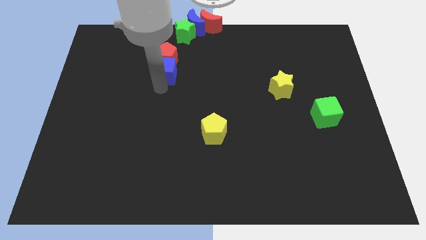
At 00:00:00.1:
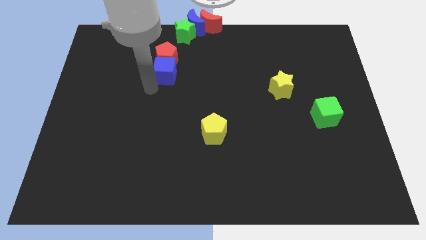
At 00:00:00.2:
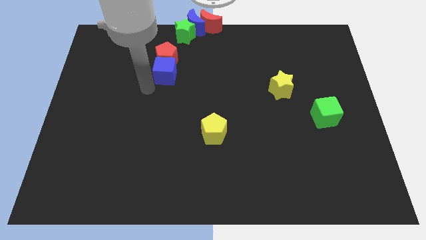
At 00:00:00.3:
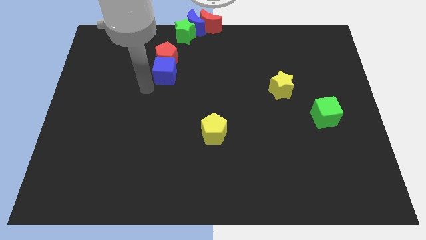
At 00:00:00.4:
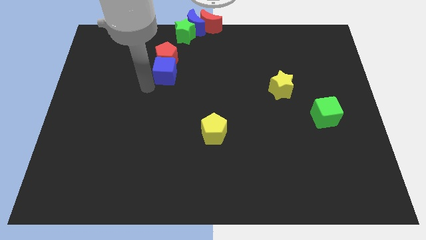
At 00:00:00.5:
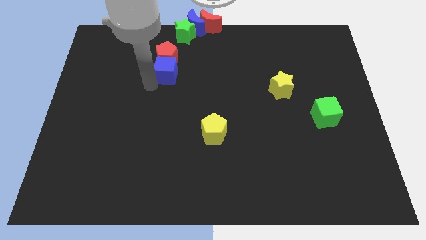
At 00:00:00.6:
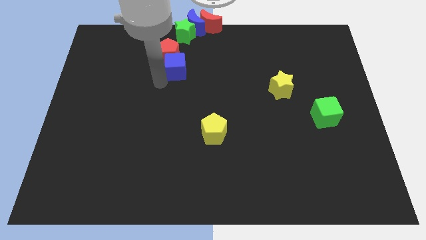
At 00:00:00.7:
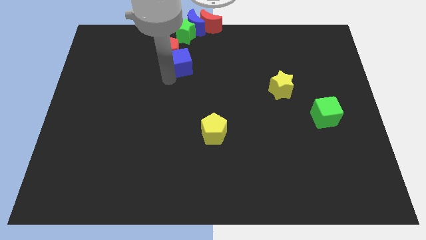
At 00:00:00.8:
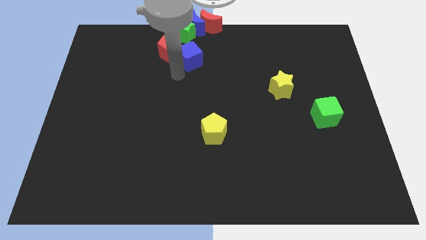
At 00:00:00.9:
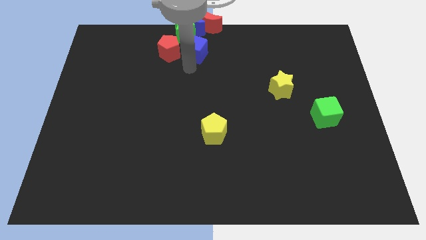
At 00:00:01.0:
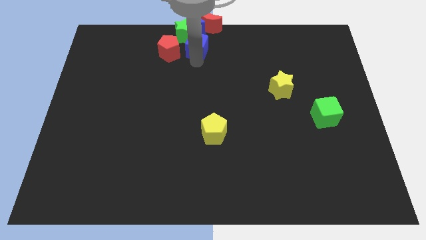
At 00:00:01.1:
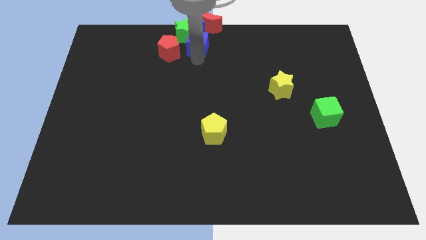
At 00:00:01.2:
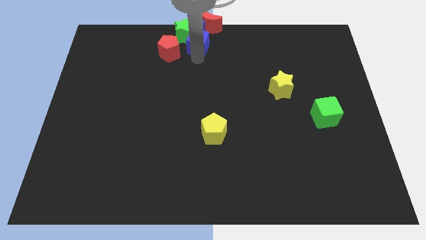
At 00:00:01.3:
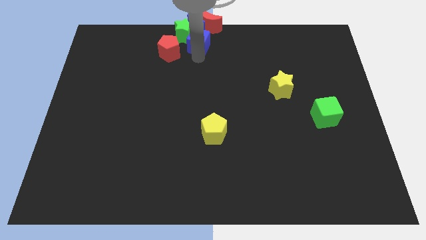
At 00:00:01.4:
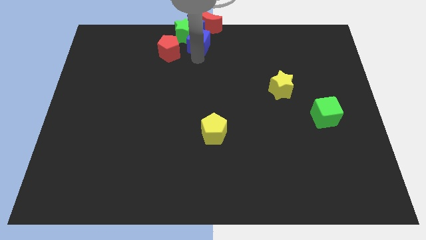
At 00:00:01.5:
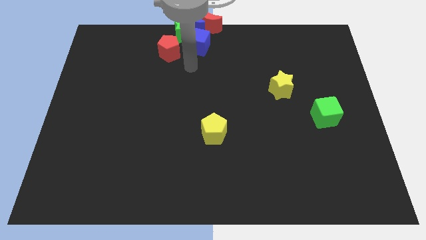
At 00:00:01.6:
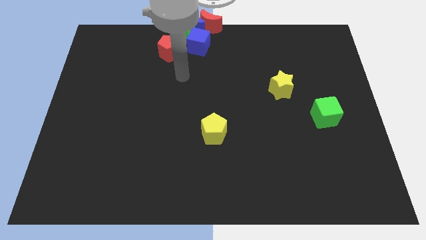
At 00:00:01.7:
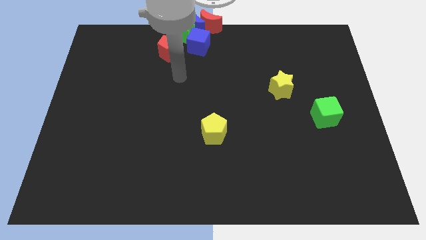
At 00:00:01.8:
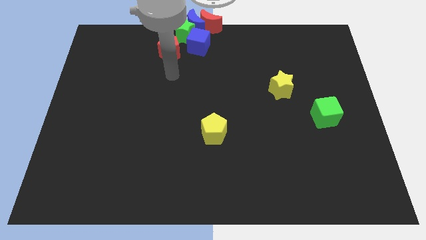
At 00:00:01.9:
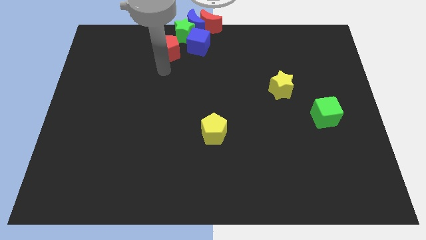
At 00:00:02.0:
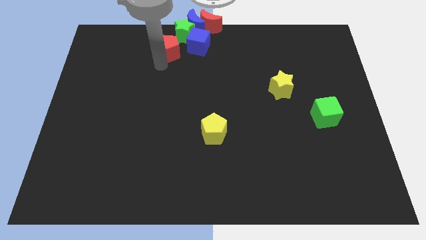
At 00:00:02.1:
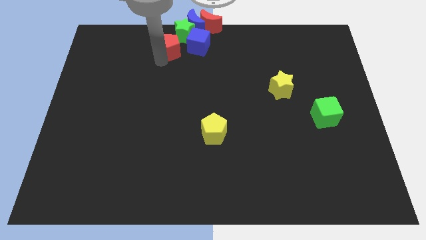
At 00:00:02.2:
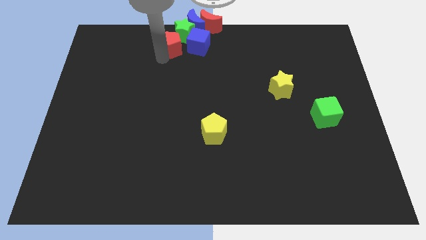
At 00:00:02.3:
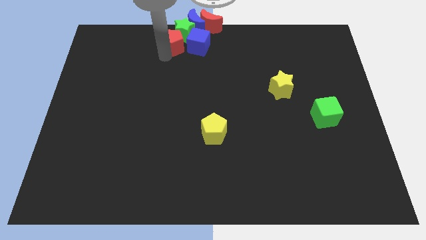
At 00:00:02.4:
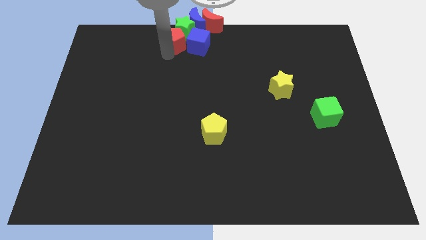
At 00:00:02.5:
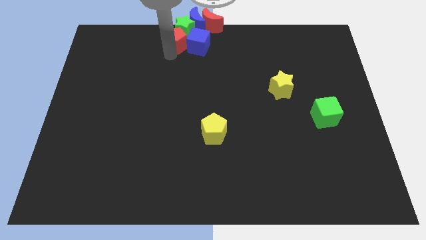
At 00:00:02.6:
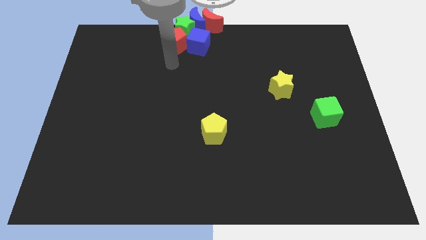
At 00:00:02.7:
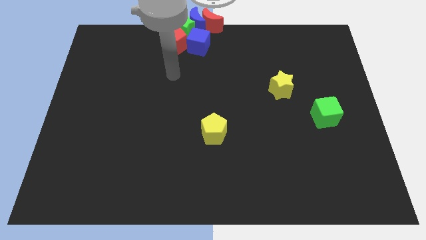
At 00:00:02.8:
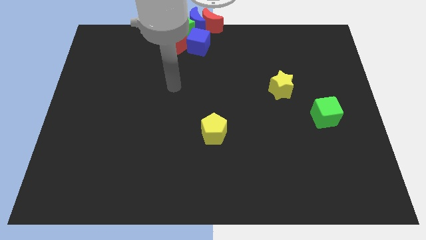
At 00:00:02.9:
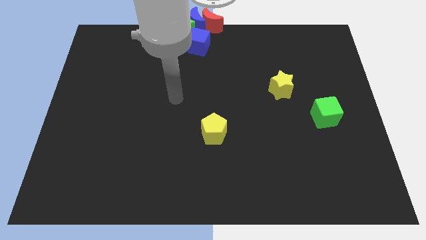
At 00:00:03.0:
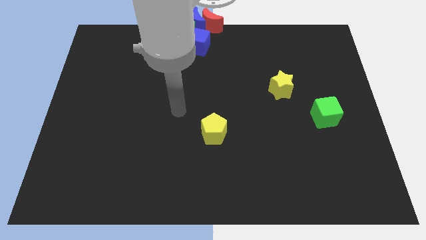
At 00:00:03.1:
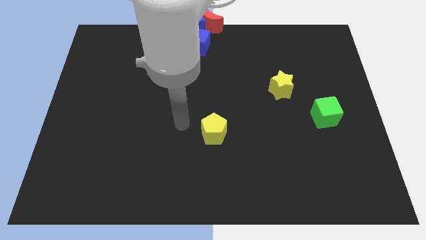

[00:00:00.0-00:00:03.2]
move blue cube right to the red pentagon to the top center of the board

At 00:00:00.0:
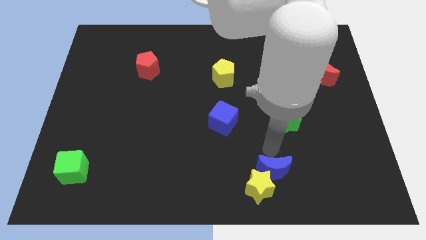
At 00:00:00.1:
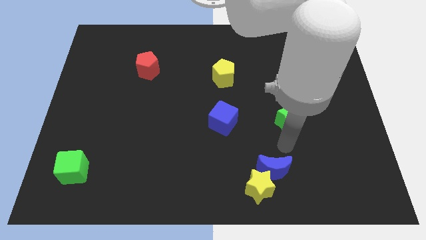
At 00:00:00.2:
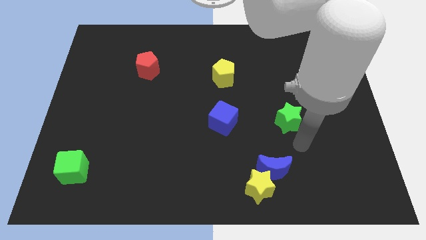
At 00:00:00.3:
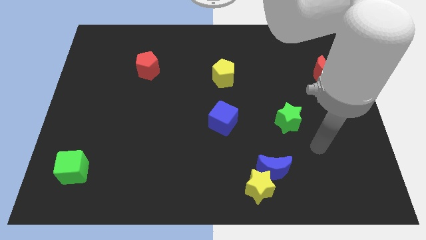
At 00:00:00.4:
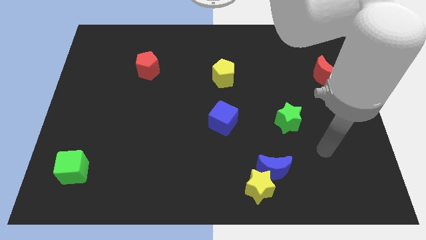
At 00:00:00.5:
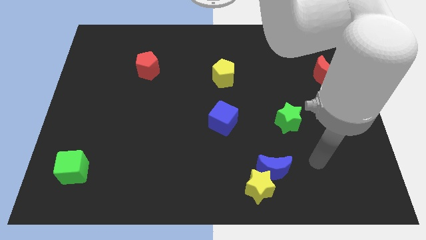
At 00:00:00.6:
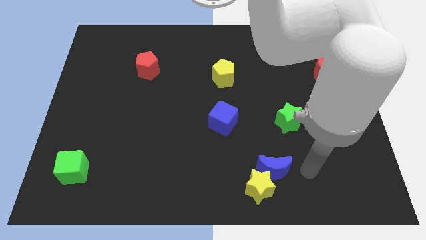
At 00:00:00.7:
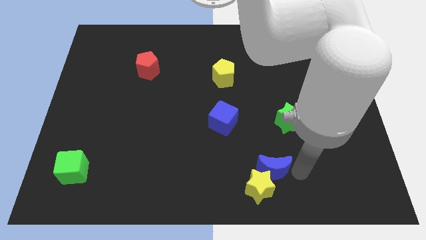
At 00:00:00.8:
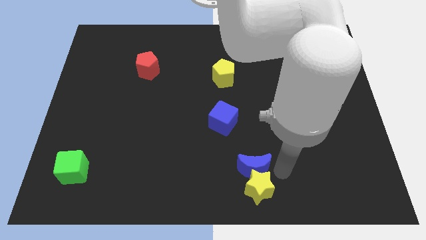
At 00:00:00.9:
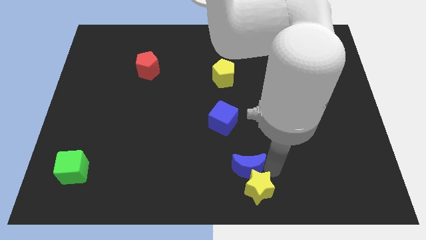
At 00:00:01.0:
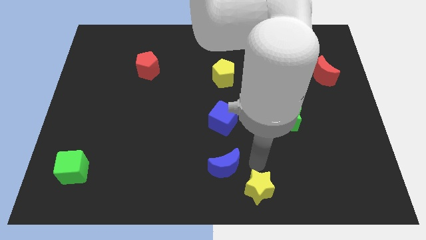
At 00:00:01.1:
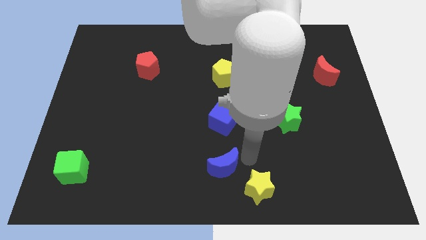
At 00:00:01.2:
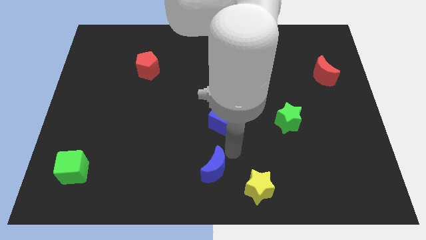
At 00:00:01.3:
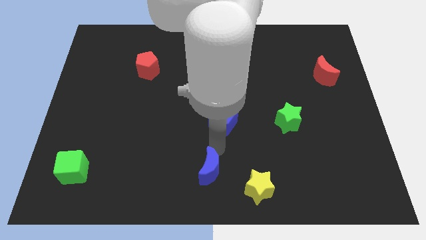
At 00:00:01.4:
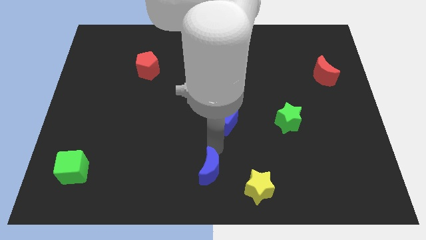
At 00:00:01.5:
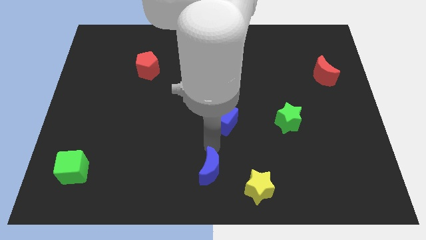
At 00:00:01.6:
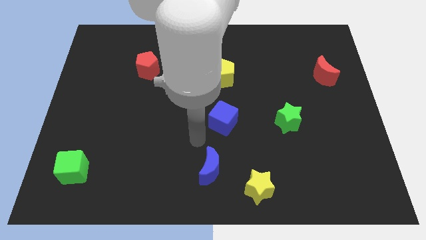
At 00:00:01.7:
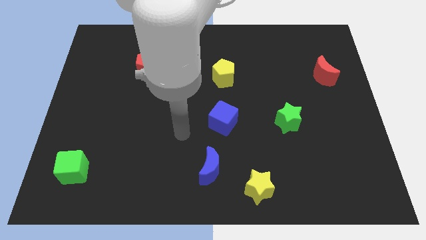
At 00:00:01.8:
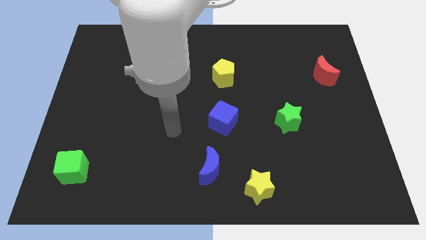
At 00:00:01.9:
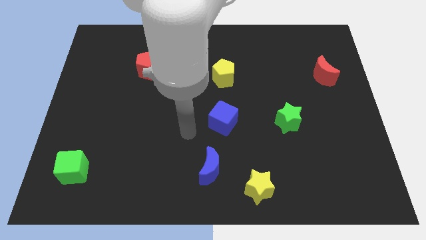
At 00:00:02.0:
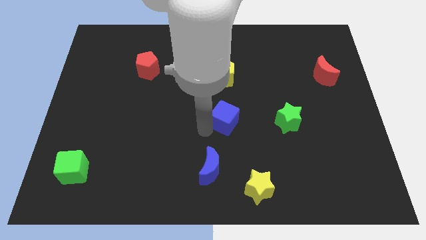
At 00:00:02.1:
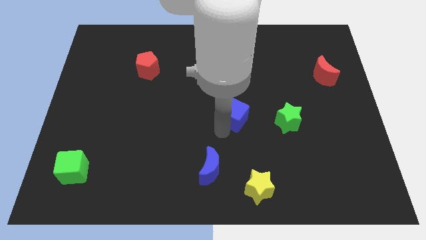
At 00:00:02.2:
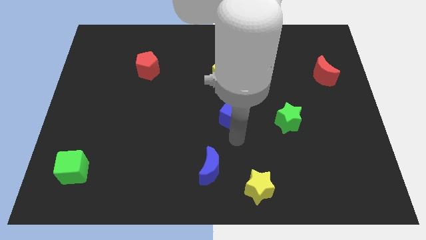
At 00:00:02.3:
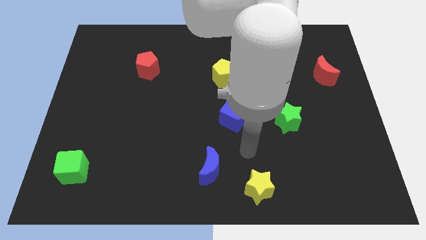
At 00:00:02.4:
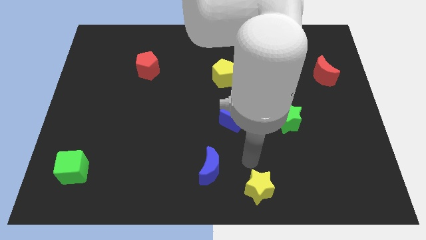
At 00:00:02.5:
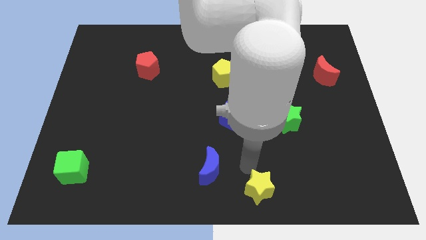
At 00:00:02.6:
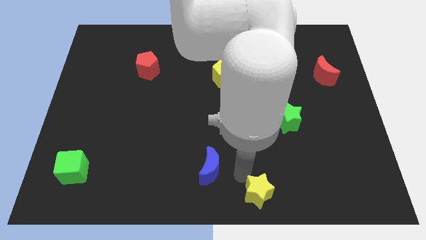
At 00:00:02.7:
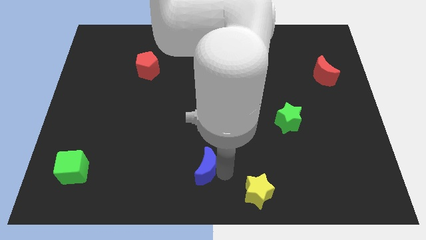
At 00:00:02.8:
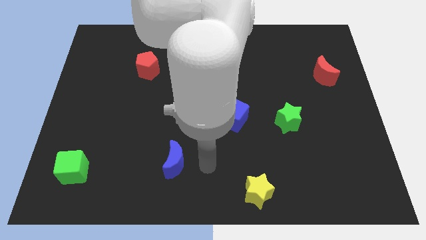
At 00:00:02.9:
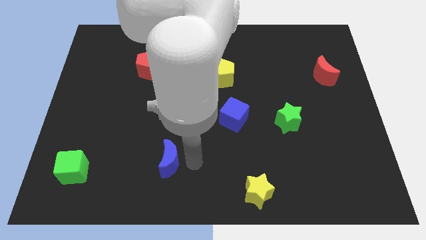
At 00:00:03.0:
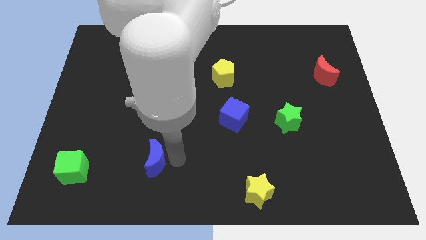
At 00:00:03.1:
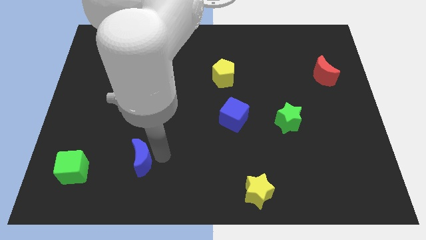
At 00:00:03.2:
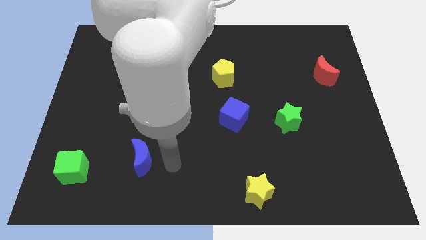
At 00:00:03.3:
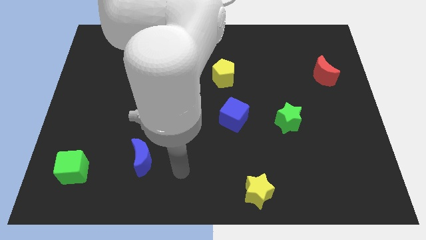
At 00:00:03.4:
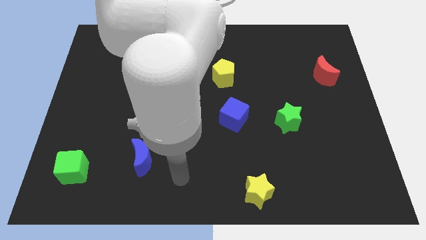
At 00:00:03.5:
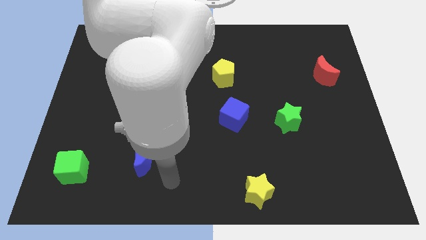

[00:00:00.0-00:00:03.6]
place the blue moon to the right of the green cube

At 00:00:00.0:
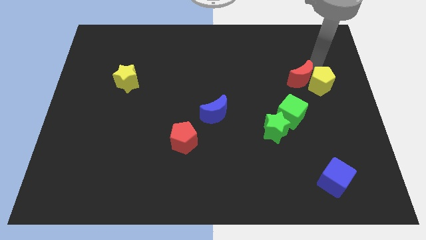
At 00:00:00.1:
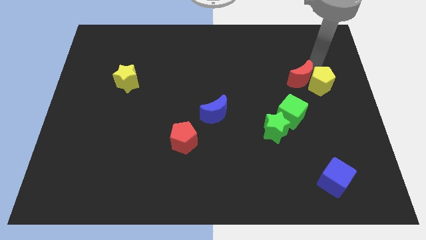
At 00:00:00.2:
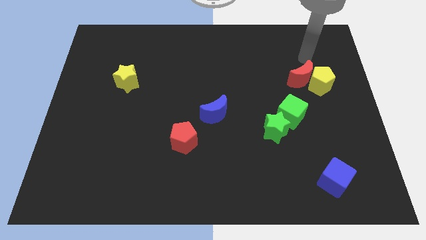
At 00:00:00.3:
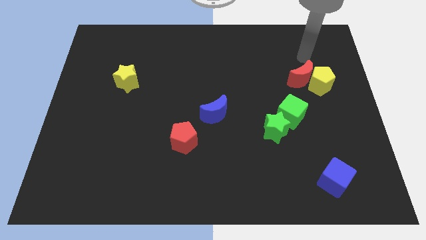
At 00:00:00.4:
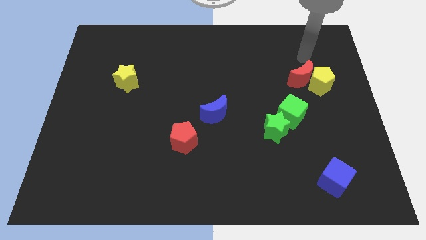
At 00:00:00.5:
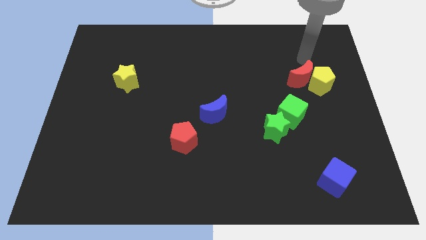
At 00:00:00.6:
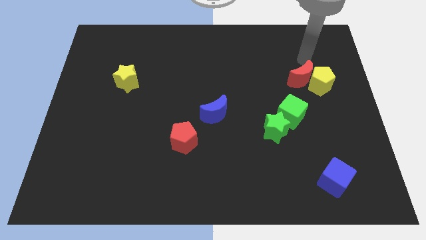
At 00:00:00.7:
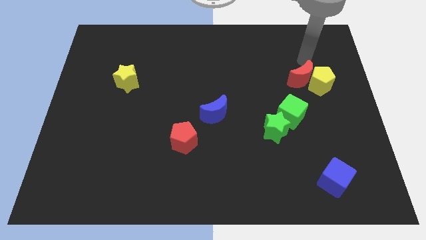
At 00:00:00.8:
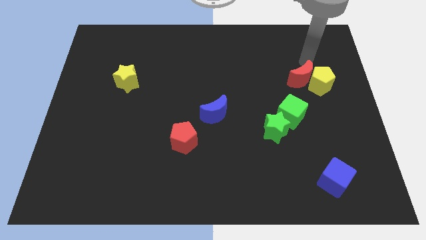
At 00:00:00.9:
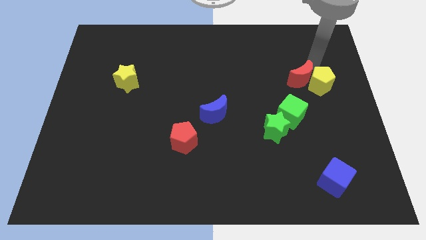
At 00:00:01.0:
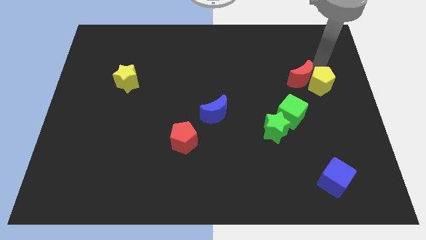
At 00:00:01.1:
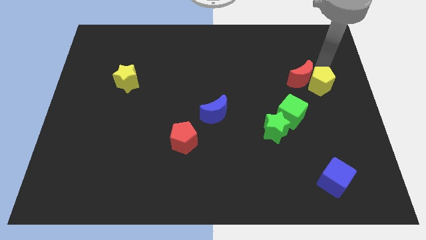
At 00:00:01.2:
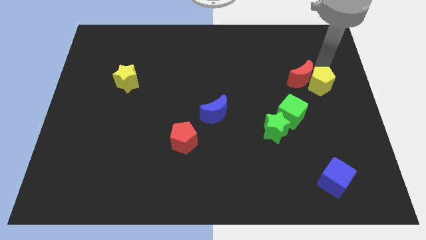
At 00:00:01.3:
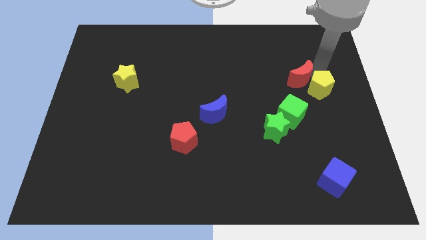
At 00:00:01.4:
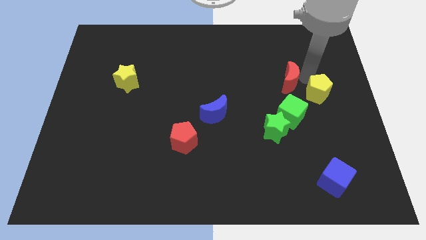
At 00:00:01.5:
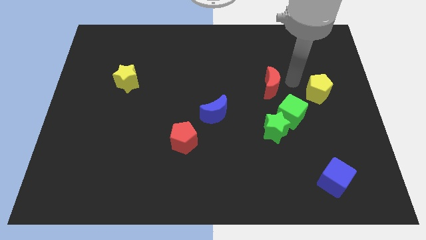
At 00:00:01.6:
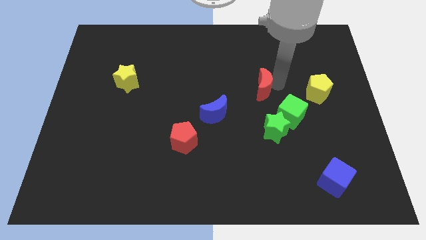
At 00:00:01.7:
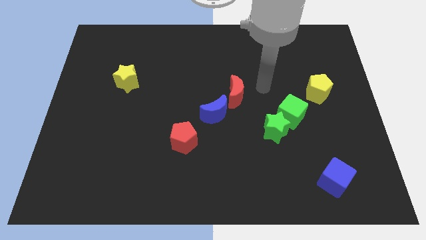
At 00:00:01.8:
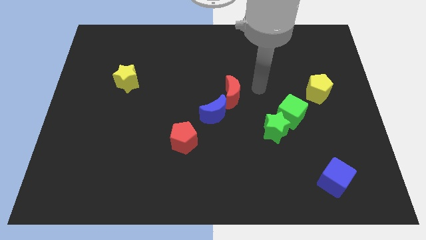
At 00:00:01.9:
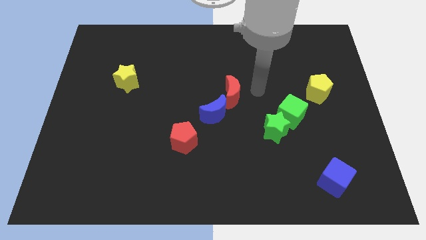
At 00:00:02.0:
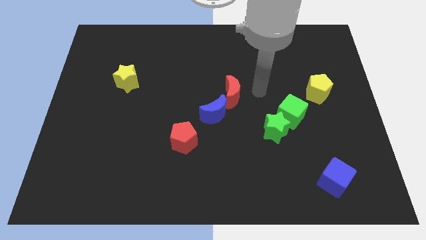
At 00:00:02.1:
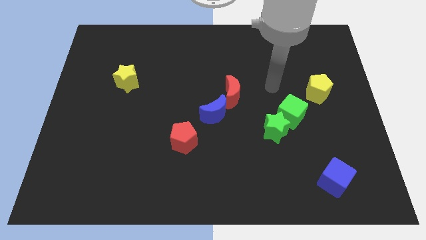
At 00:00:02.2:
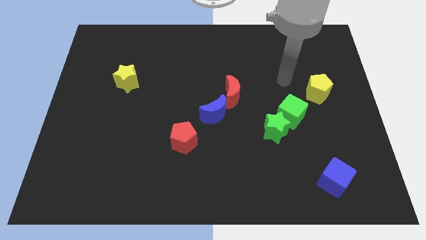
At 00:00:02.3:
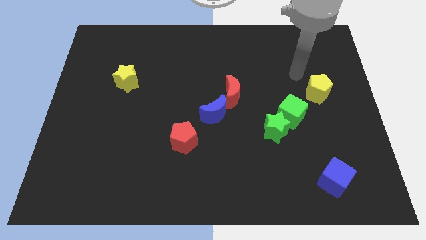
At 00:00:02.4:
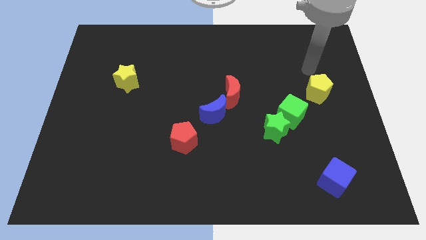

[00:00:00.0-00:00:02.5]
move the red crescent diagonally to the top right of the blue crescent
